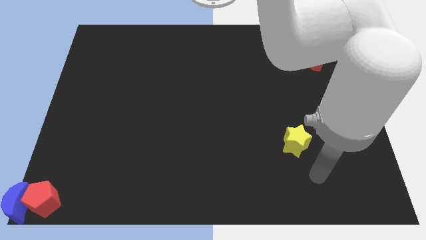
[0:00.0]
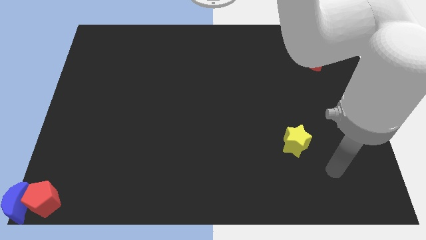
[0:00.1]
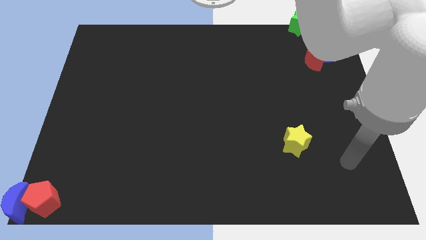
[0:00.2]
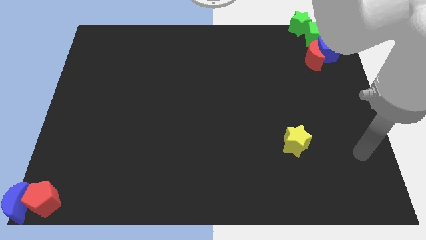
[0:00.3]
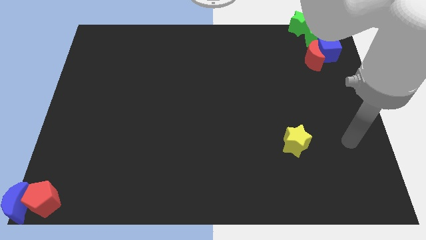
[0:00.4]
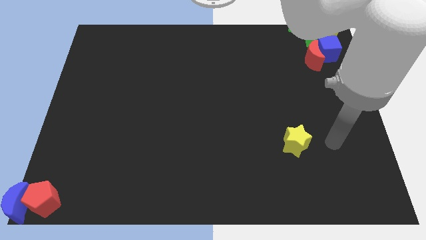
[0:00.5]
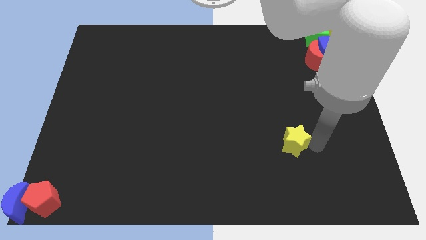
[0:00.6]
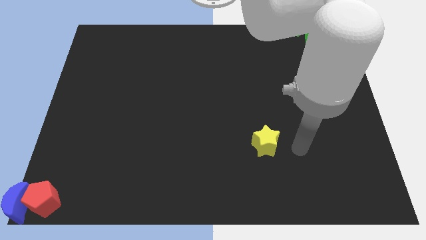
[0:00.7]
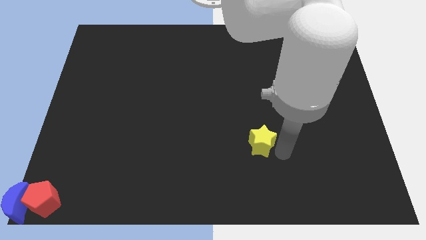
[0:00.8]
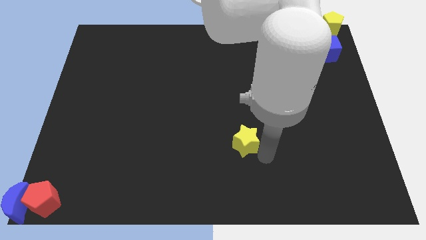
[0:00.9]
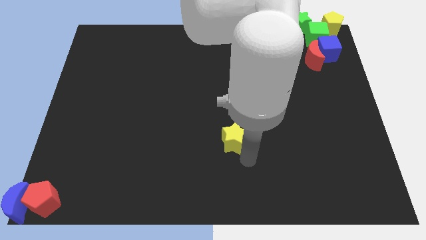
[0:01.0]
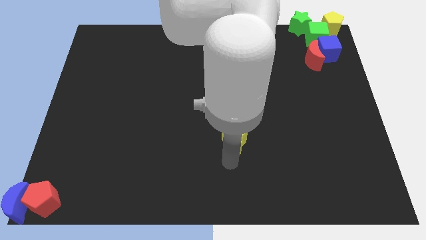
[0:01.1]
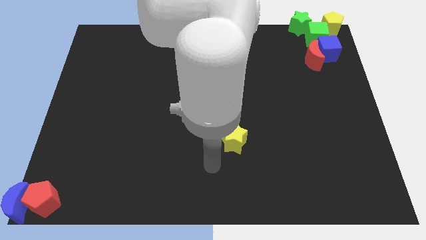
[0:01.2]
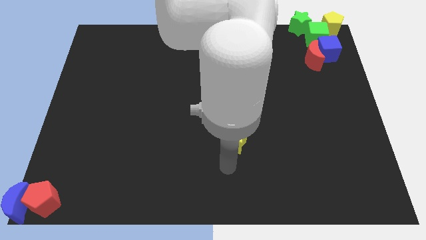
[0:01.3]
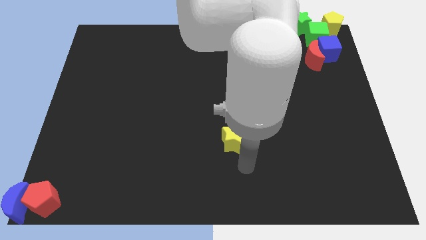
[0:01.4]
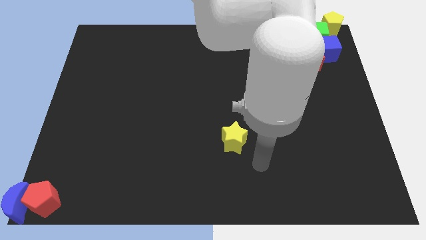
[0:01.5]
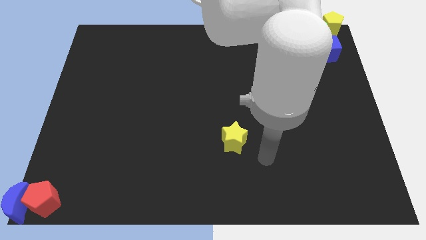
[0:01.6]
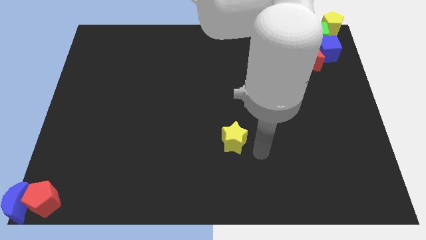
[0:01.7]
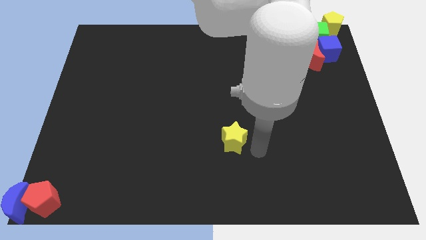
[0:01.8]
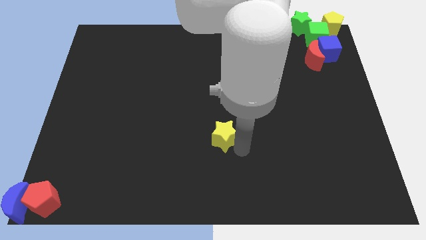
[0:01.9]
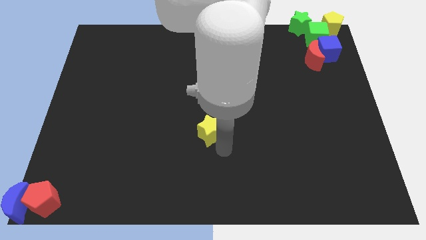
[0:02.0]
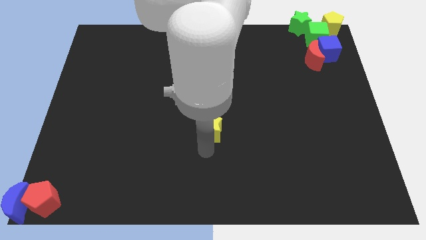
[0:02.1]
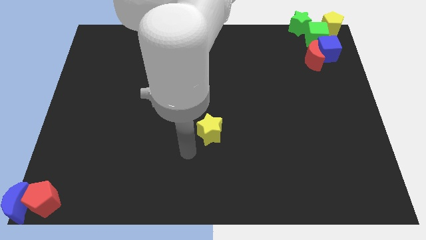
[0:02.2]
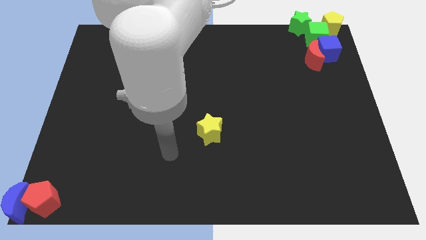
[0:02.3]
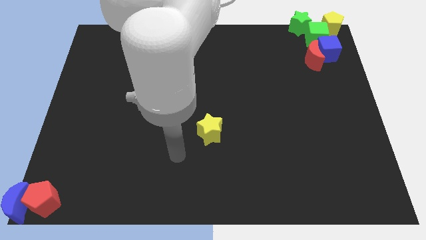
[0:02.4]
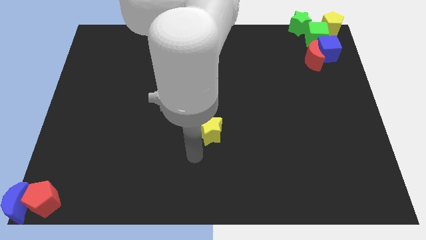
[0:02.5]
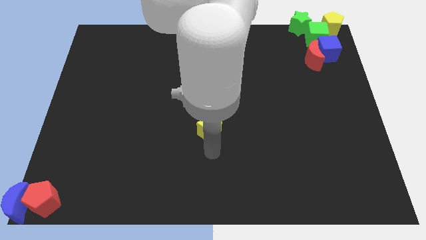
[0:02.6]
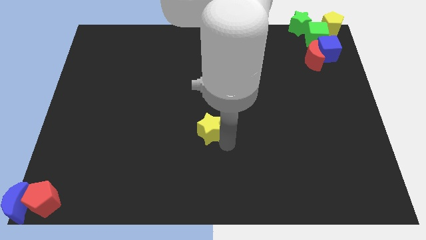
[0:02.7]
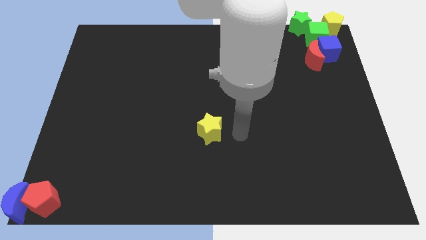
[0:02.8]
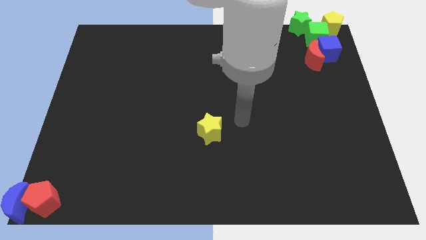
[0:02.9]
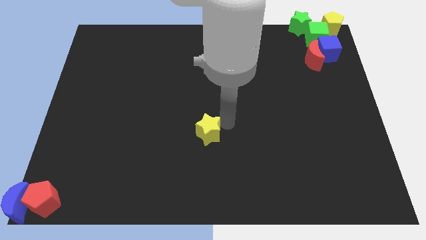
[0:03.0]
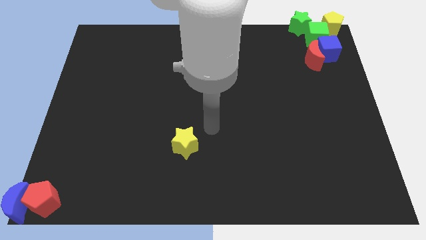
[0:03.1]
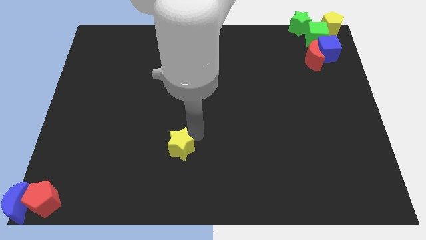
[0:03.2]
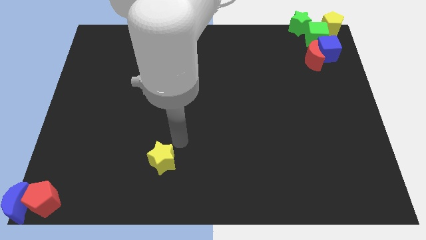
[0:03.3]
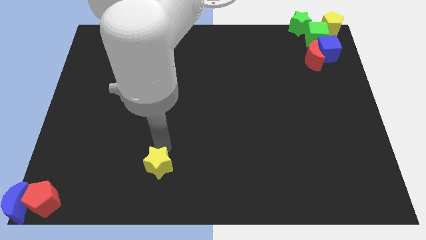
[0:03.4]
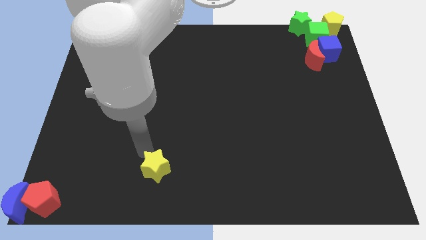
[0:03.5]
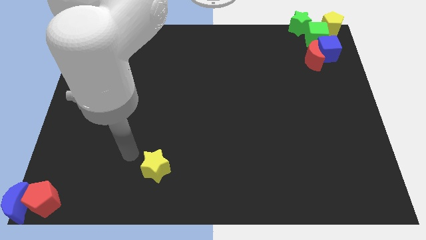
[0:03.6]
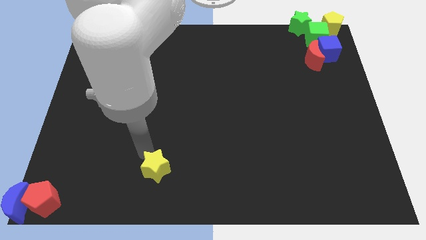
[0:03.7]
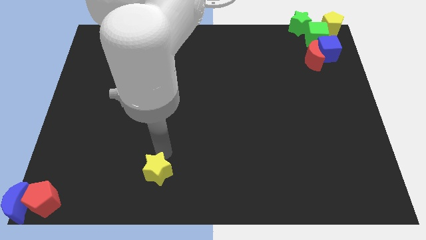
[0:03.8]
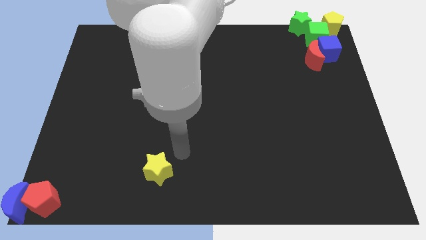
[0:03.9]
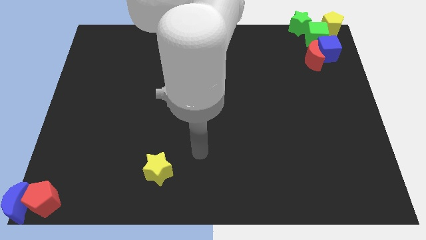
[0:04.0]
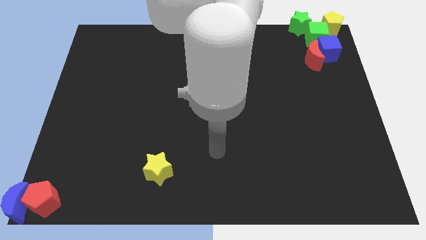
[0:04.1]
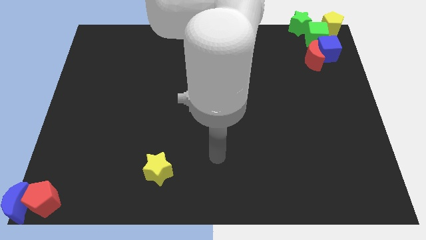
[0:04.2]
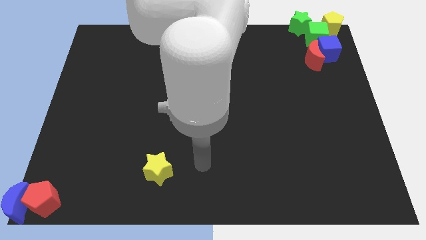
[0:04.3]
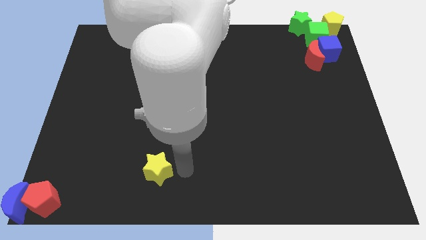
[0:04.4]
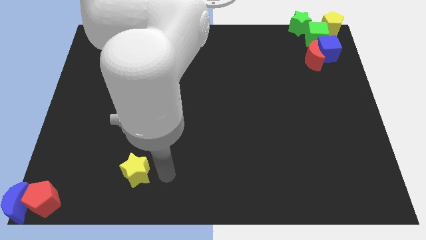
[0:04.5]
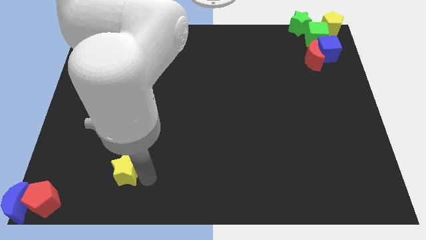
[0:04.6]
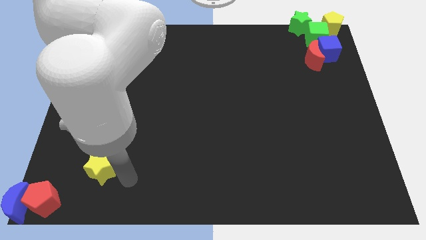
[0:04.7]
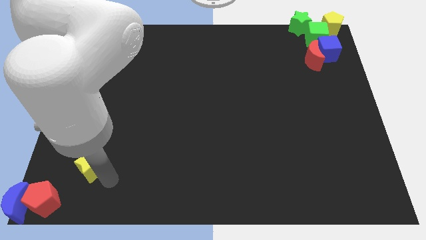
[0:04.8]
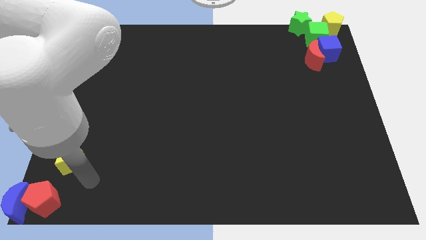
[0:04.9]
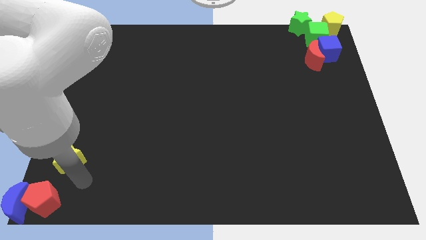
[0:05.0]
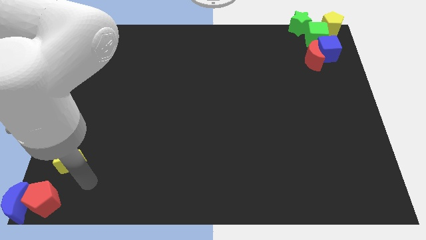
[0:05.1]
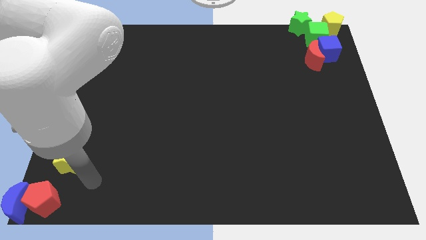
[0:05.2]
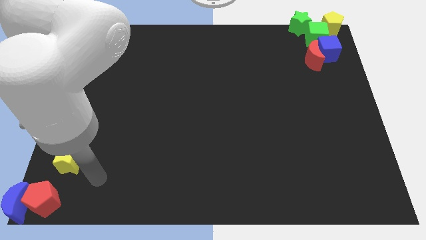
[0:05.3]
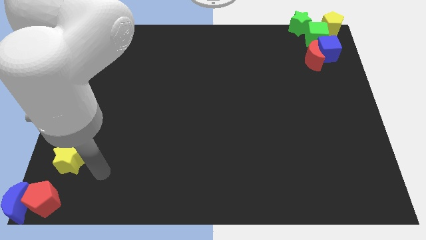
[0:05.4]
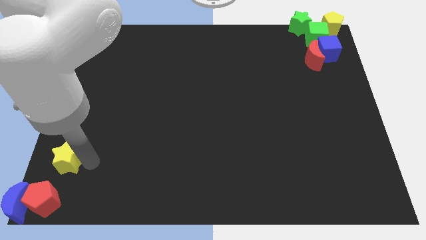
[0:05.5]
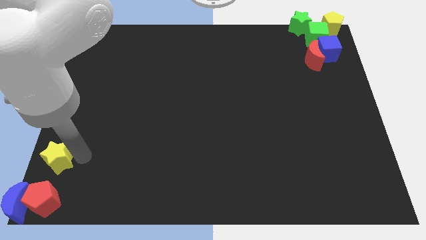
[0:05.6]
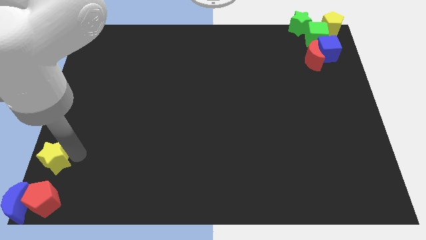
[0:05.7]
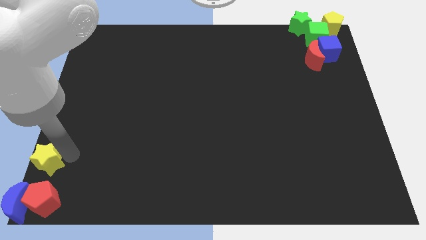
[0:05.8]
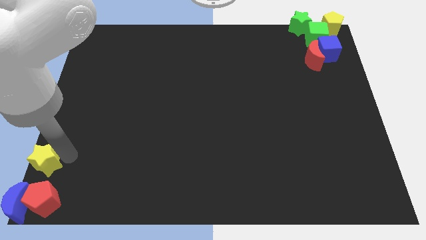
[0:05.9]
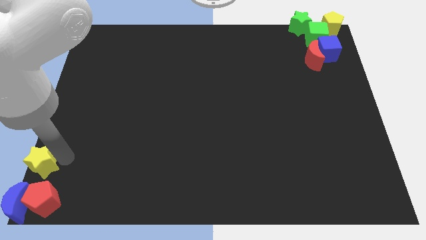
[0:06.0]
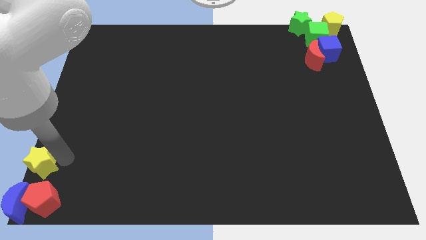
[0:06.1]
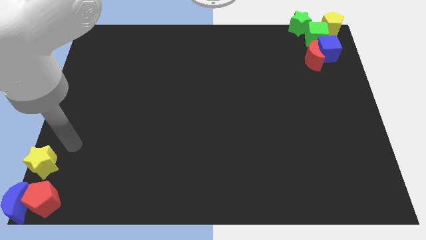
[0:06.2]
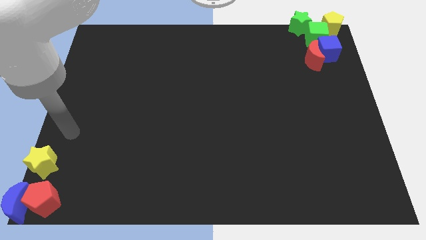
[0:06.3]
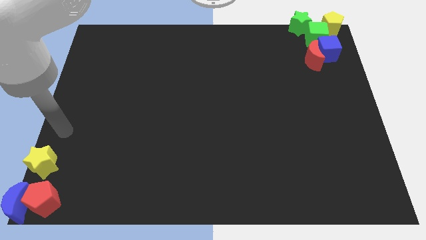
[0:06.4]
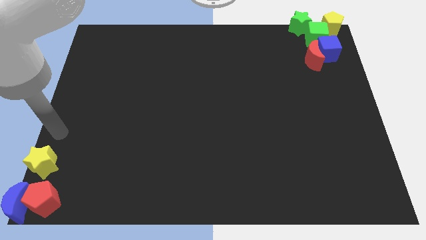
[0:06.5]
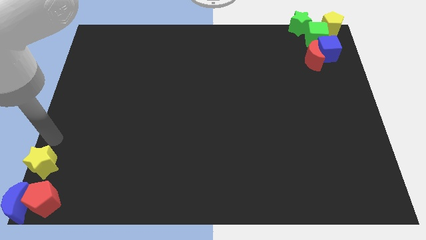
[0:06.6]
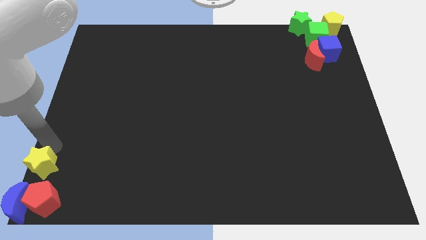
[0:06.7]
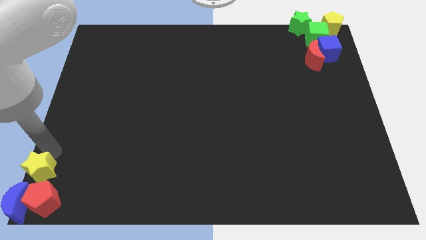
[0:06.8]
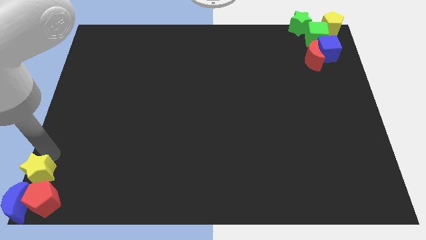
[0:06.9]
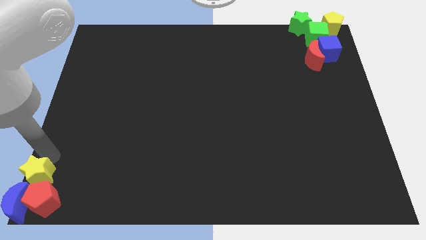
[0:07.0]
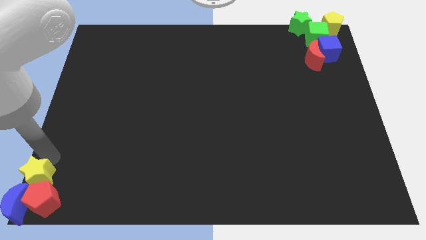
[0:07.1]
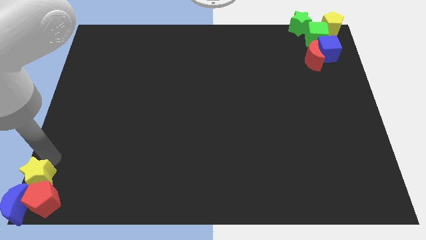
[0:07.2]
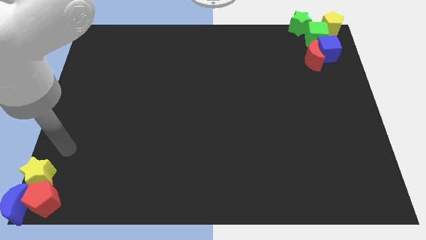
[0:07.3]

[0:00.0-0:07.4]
place the yellow star above the blue crescent and the red pentagon

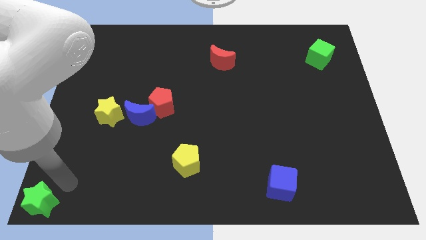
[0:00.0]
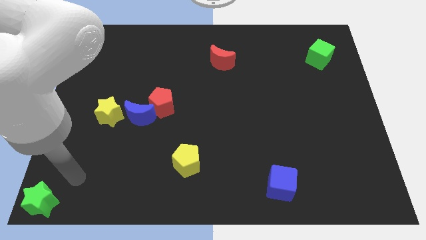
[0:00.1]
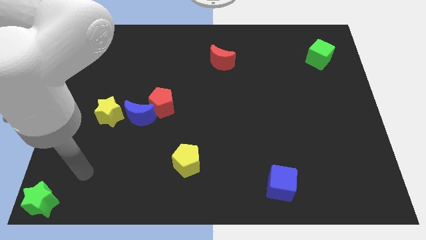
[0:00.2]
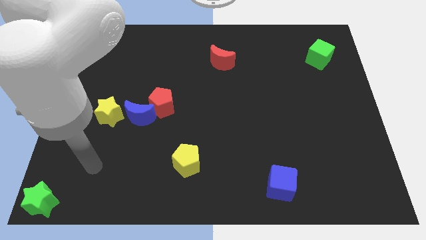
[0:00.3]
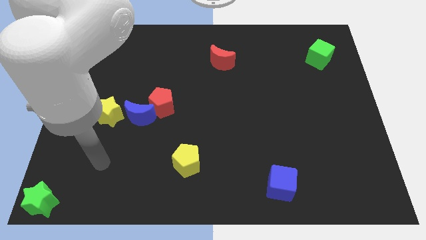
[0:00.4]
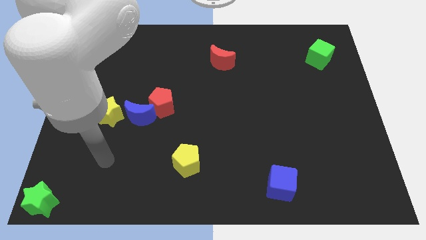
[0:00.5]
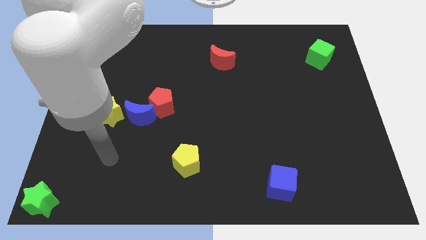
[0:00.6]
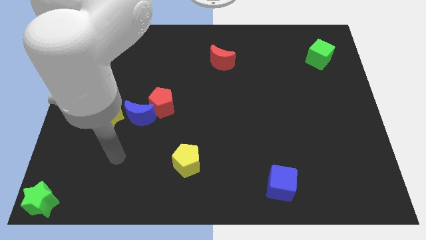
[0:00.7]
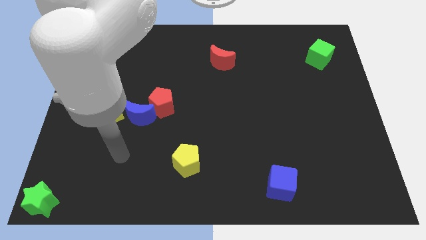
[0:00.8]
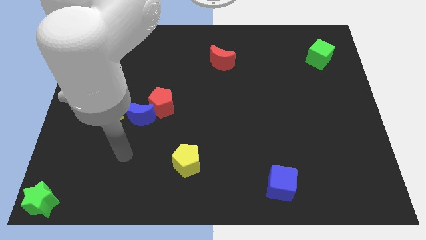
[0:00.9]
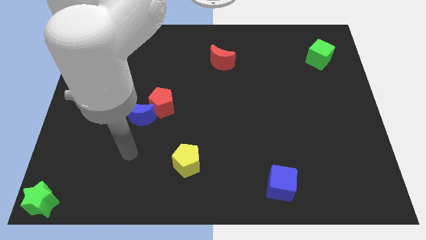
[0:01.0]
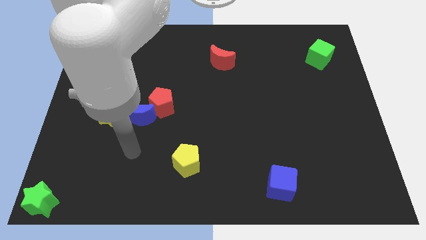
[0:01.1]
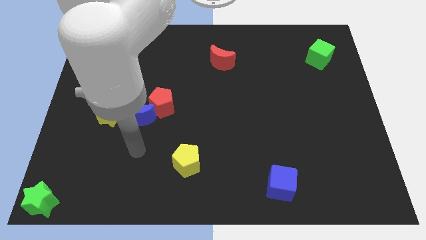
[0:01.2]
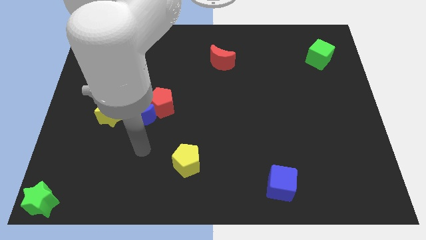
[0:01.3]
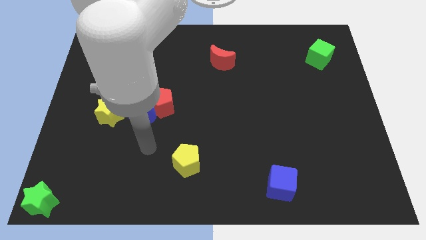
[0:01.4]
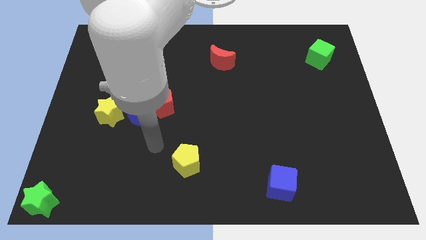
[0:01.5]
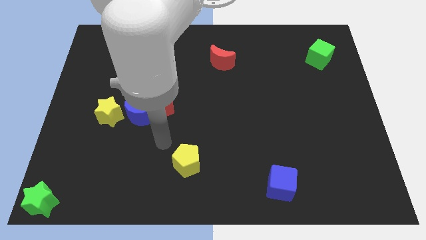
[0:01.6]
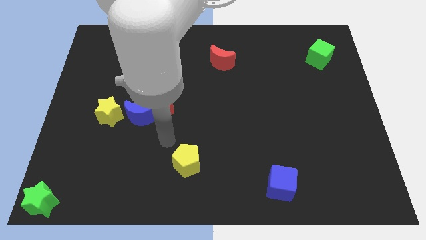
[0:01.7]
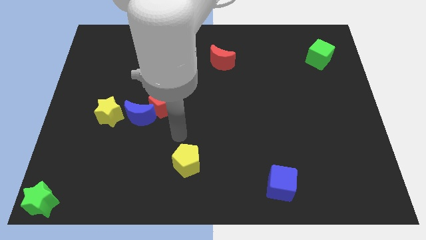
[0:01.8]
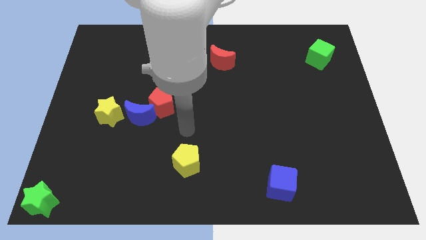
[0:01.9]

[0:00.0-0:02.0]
move your arm to the top of yellow pentagon
